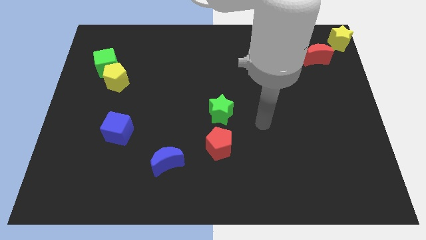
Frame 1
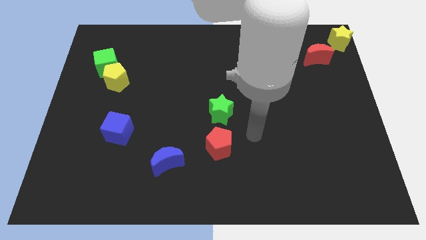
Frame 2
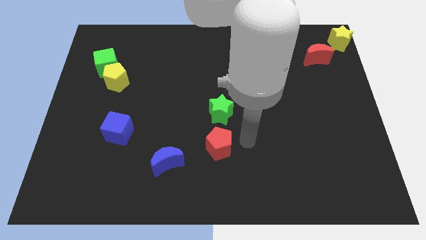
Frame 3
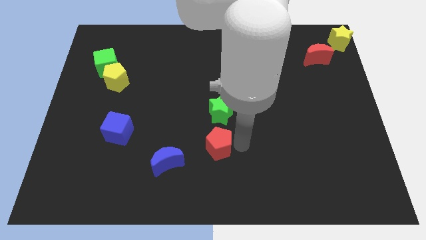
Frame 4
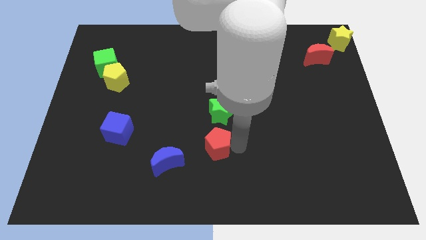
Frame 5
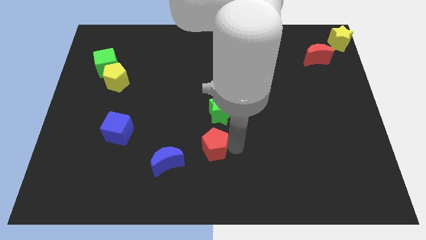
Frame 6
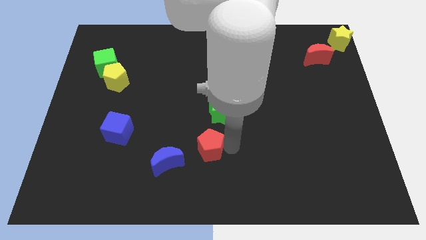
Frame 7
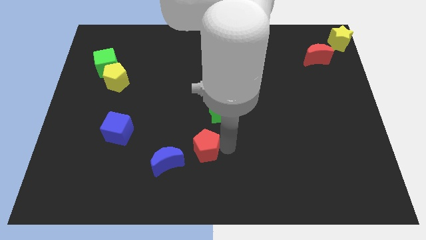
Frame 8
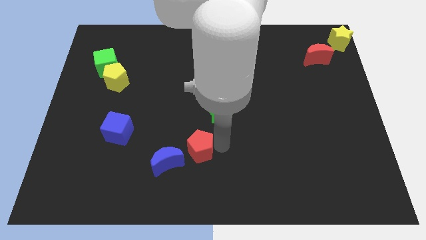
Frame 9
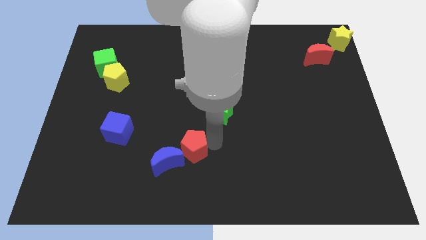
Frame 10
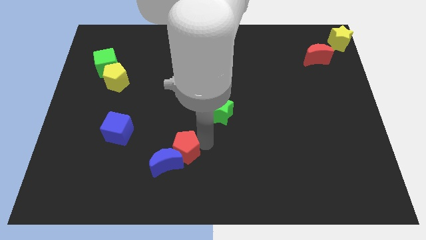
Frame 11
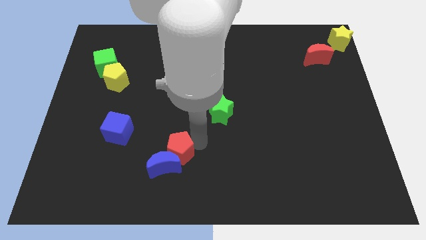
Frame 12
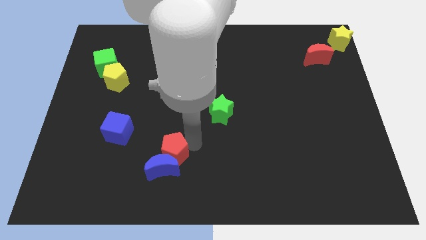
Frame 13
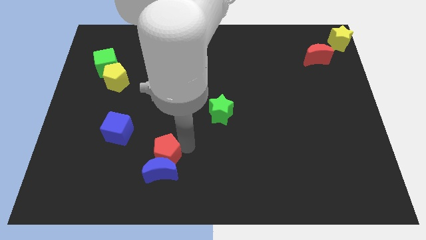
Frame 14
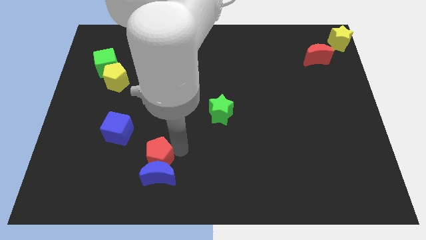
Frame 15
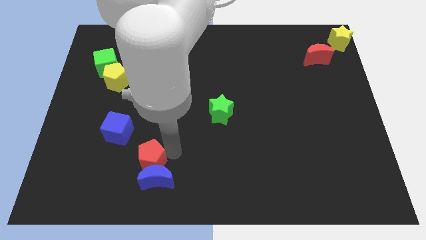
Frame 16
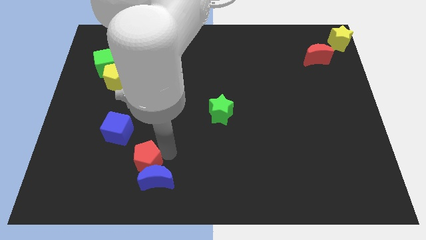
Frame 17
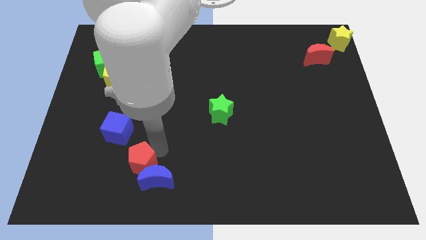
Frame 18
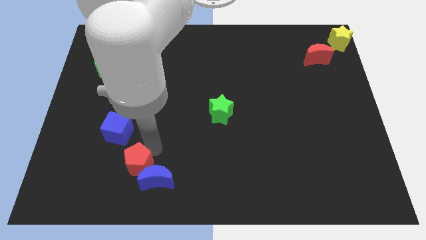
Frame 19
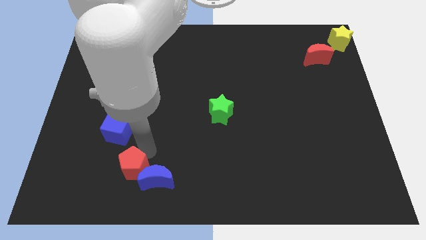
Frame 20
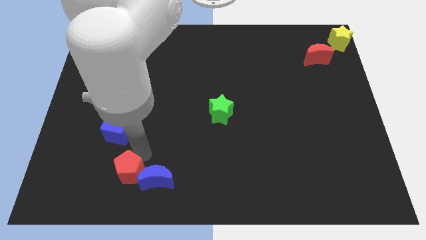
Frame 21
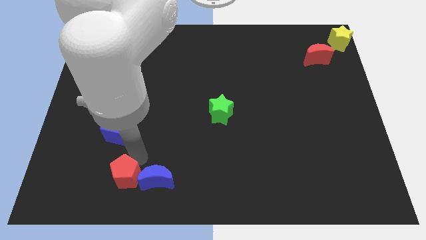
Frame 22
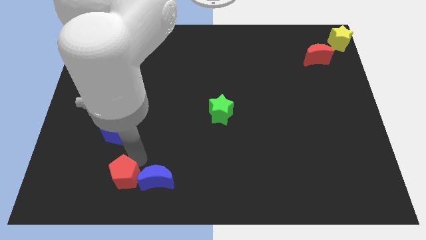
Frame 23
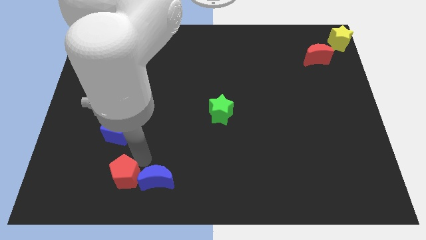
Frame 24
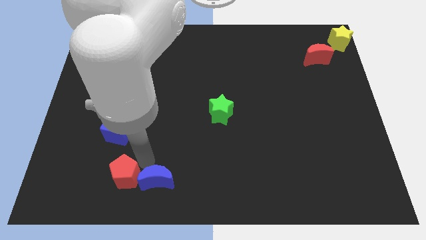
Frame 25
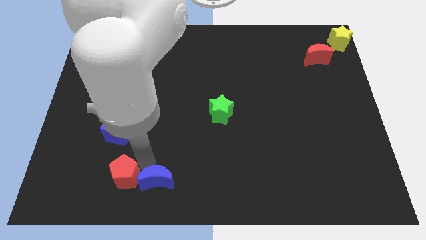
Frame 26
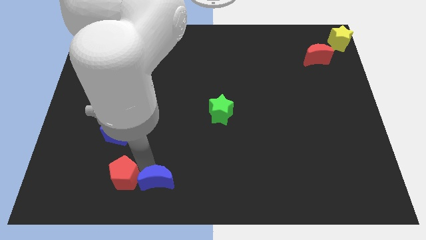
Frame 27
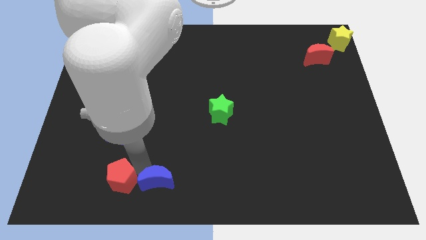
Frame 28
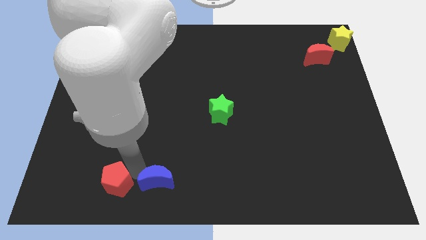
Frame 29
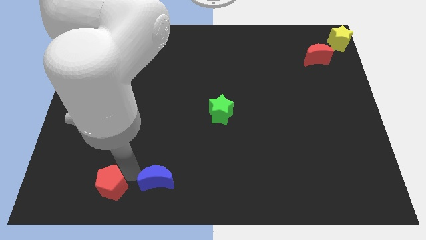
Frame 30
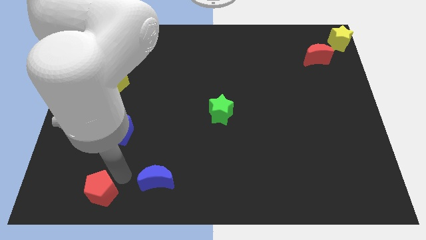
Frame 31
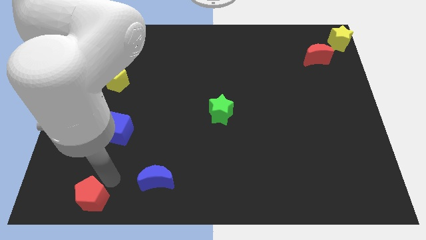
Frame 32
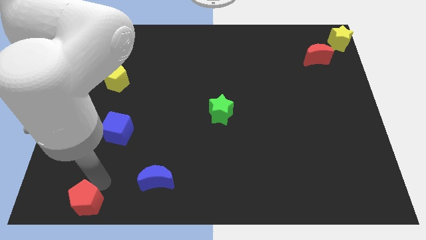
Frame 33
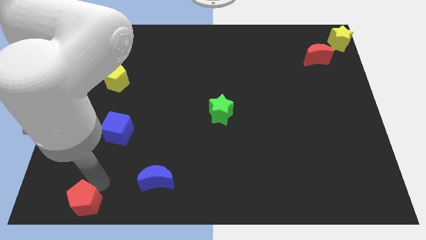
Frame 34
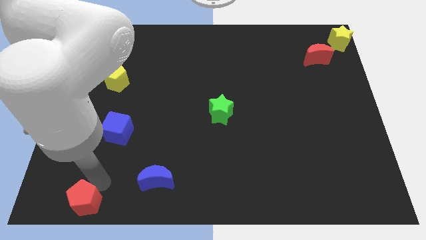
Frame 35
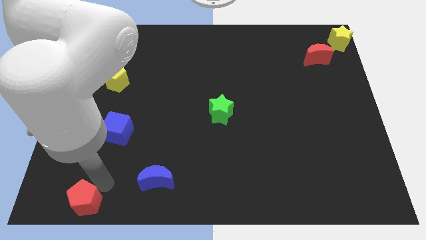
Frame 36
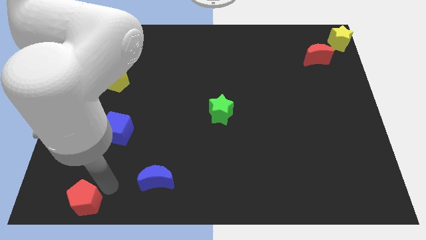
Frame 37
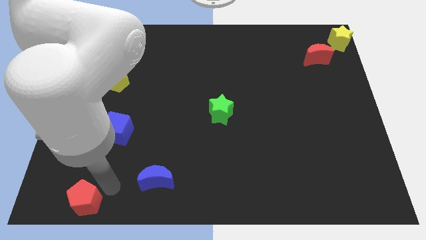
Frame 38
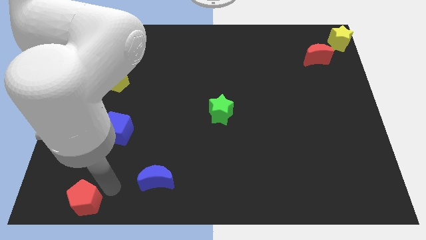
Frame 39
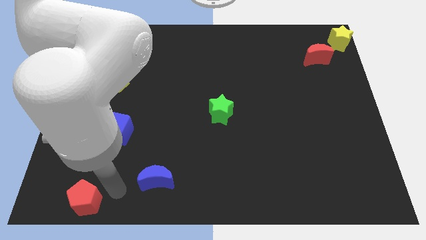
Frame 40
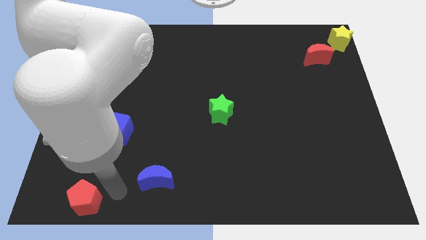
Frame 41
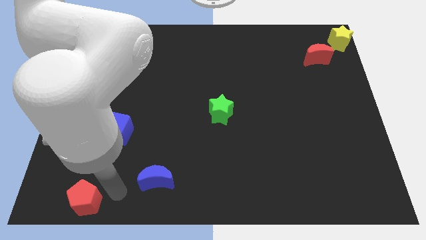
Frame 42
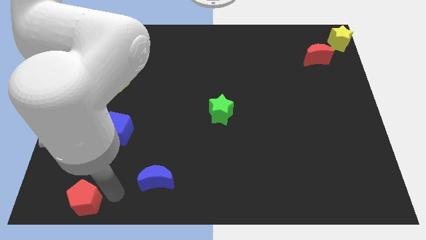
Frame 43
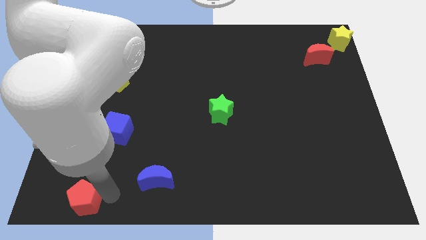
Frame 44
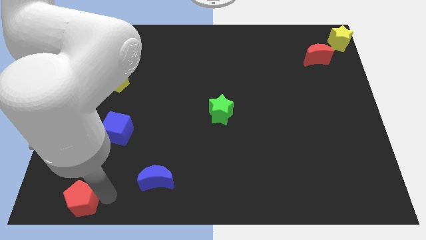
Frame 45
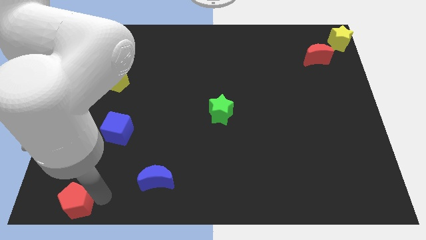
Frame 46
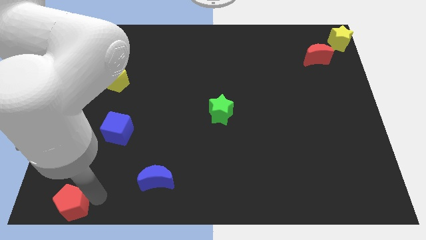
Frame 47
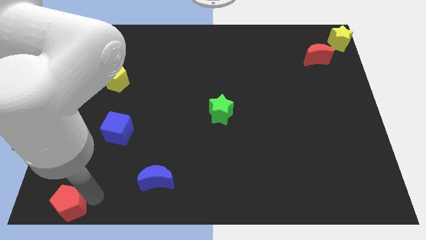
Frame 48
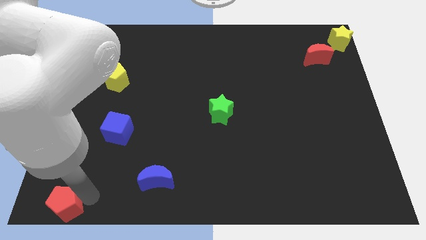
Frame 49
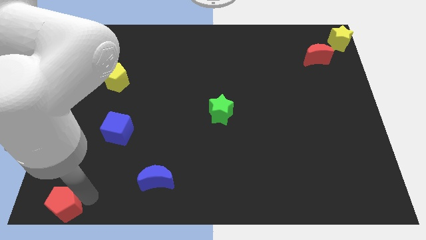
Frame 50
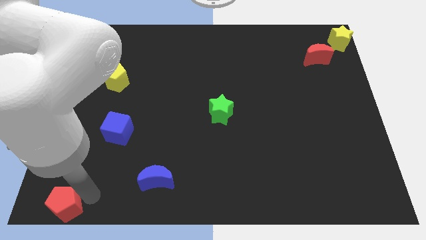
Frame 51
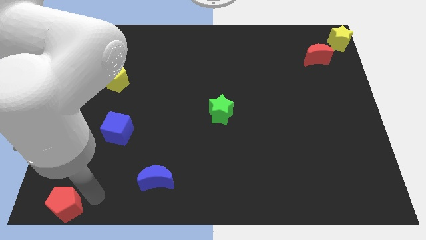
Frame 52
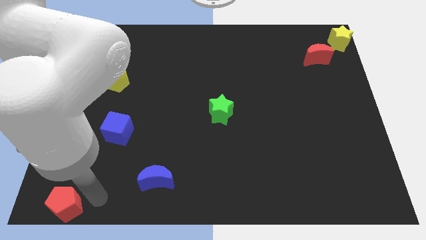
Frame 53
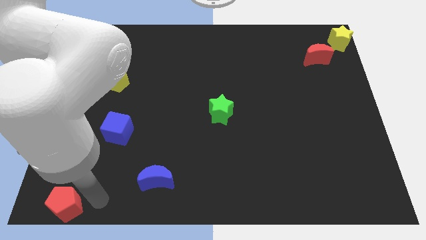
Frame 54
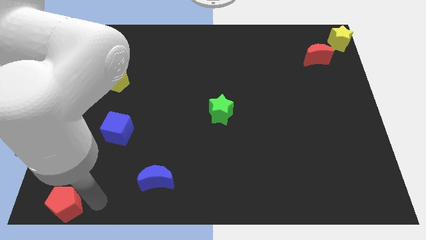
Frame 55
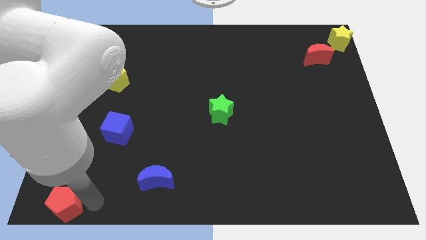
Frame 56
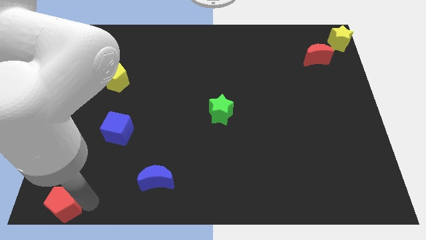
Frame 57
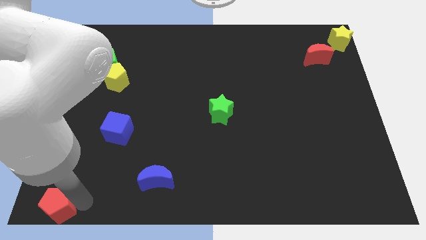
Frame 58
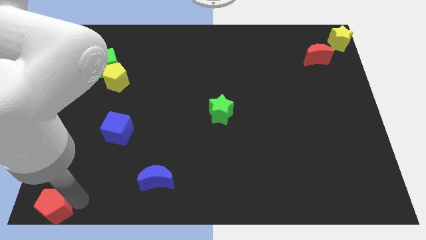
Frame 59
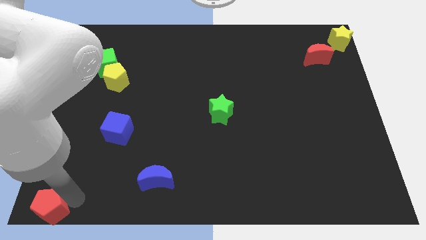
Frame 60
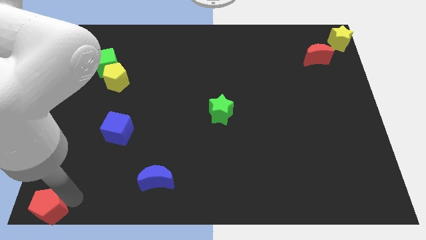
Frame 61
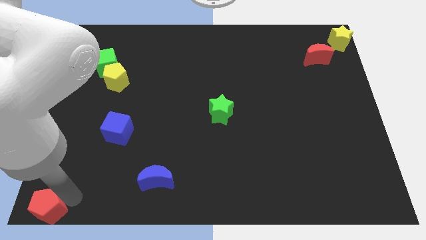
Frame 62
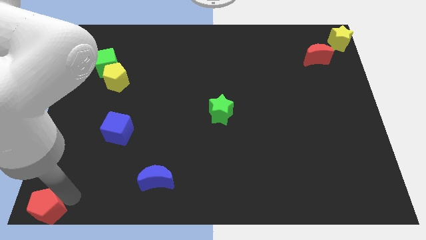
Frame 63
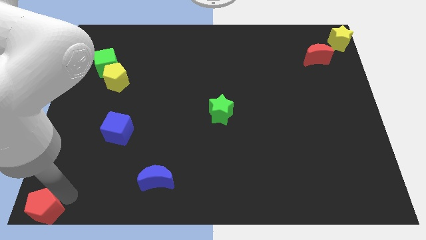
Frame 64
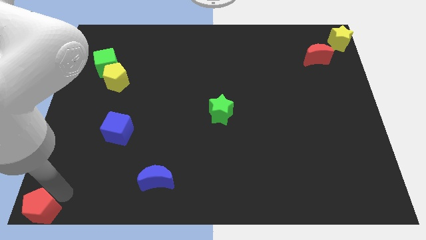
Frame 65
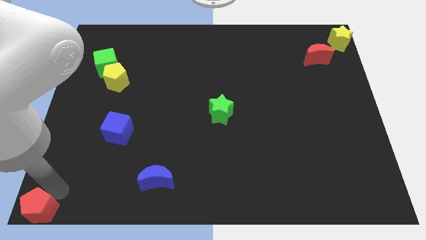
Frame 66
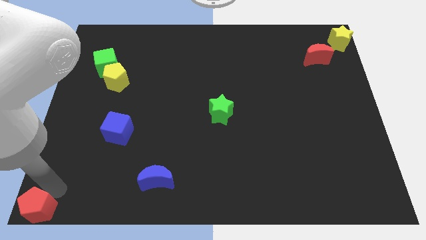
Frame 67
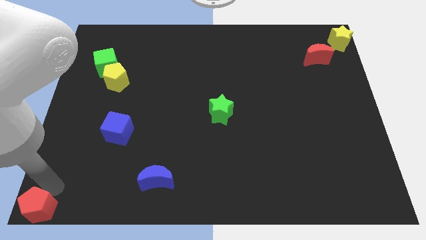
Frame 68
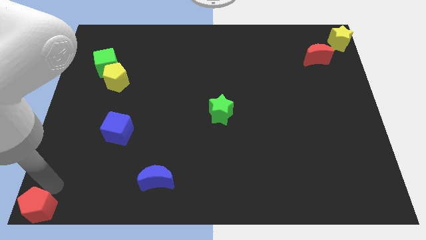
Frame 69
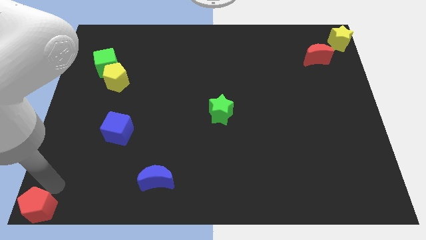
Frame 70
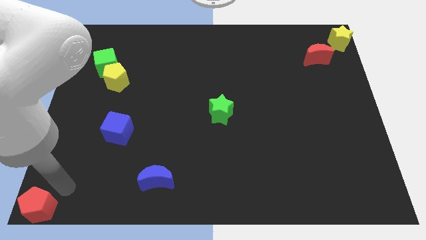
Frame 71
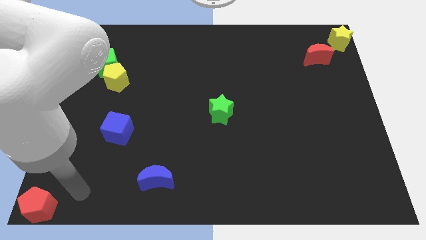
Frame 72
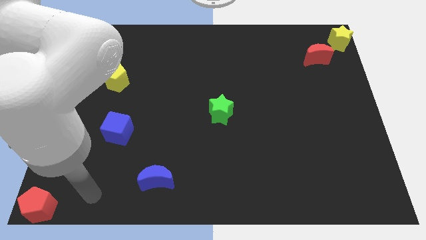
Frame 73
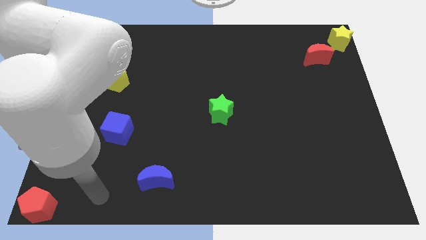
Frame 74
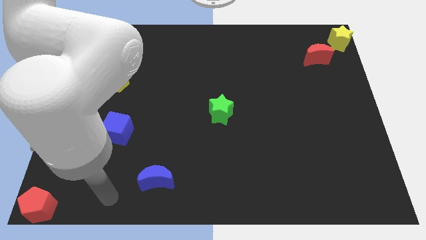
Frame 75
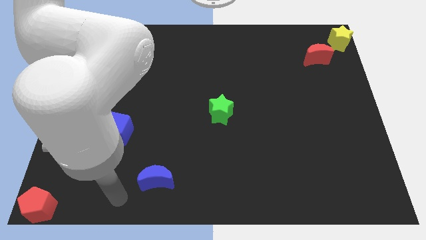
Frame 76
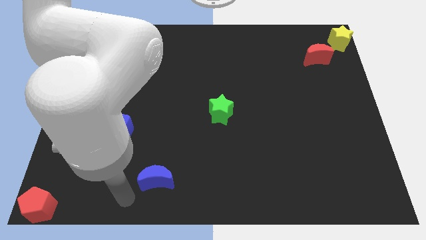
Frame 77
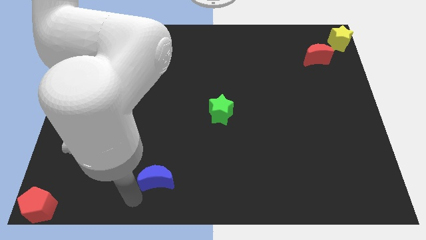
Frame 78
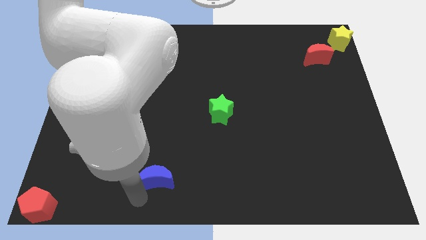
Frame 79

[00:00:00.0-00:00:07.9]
move red pentagon bottom left corner of the board

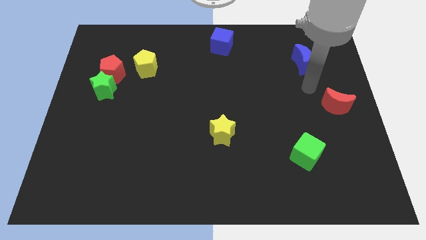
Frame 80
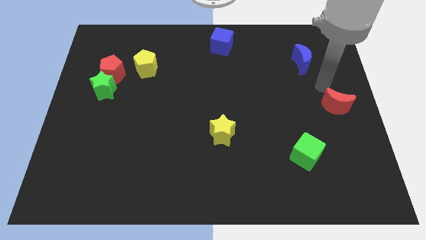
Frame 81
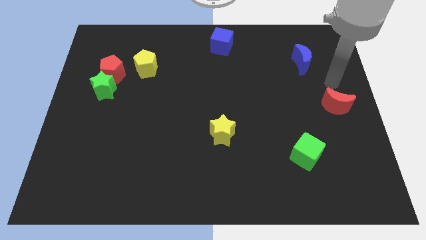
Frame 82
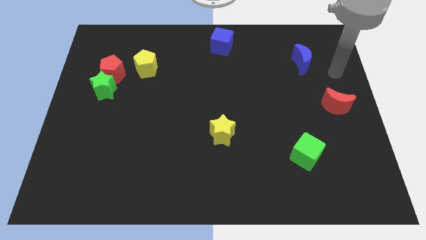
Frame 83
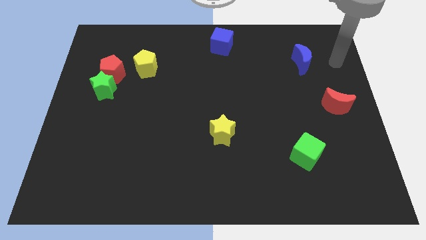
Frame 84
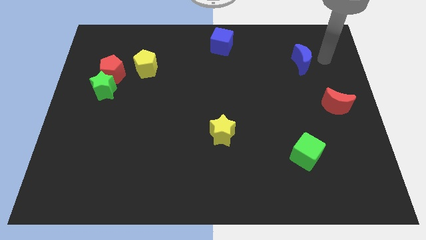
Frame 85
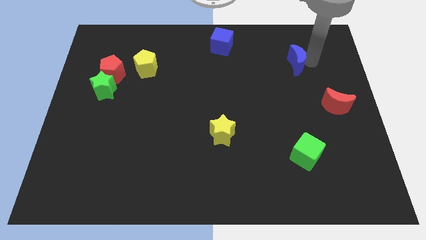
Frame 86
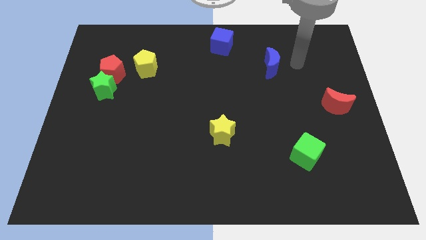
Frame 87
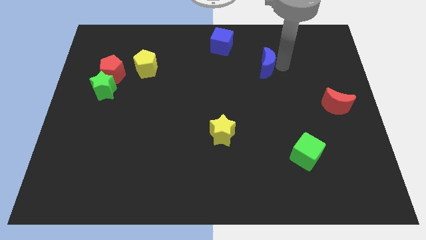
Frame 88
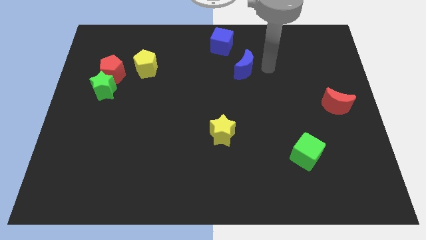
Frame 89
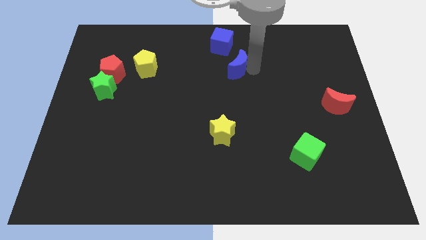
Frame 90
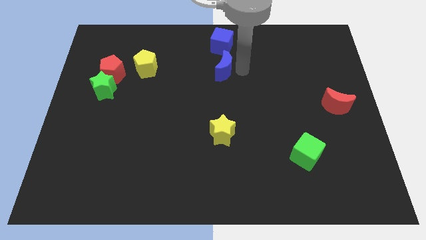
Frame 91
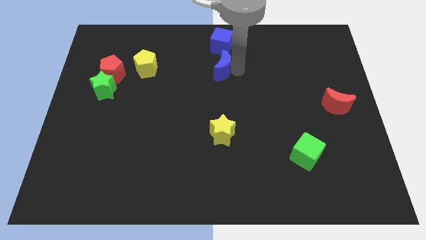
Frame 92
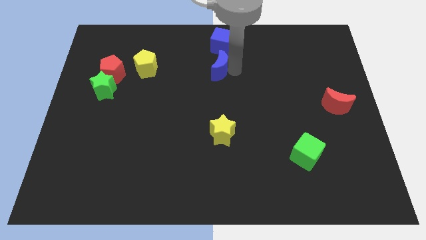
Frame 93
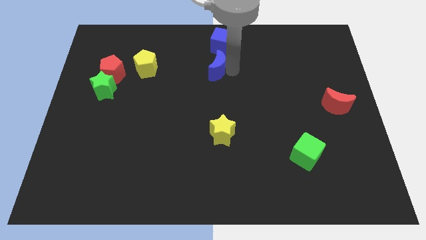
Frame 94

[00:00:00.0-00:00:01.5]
push blue crescent below blue cube
